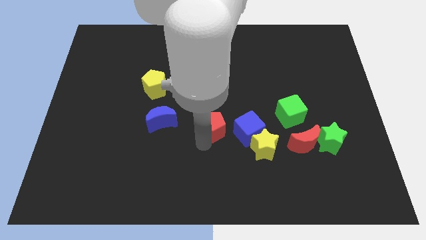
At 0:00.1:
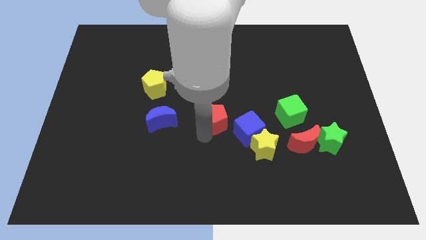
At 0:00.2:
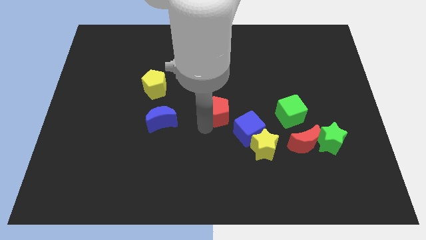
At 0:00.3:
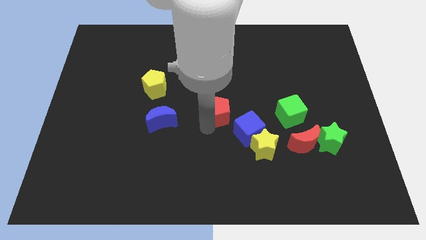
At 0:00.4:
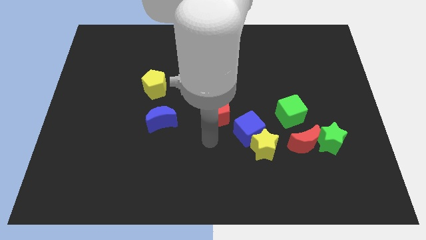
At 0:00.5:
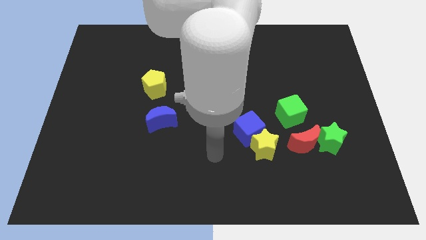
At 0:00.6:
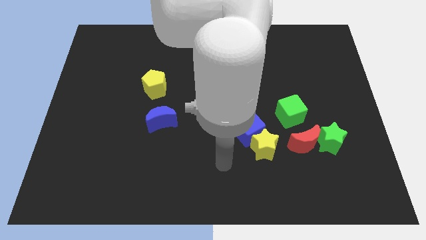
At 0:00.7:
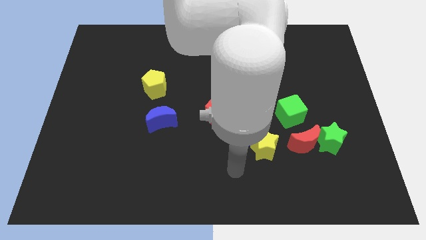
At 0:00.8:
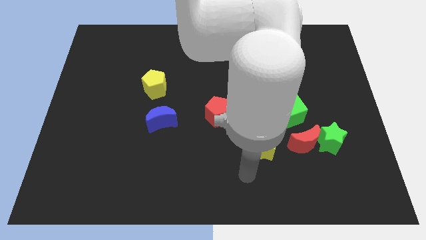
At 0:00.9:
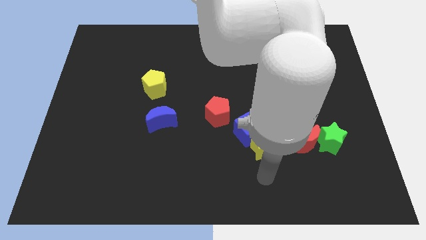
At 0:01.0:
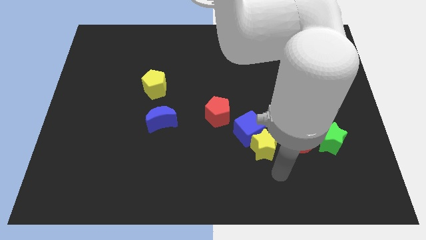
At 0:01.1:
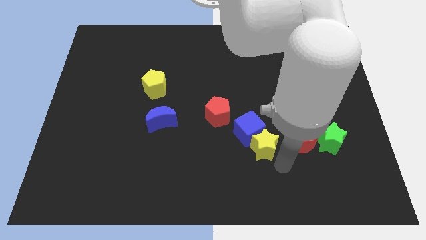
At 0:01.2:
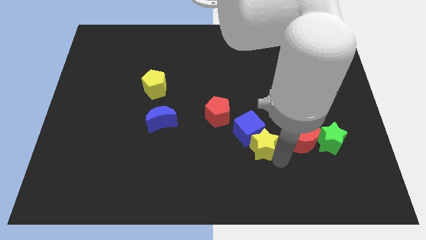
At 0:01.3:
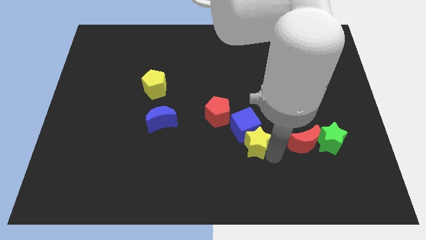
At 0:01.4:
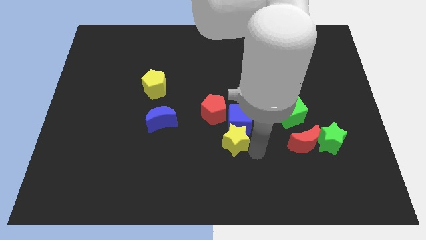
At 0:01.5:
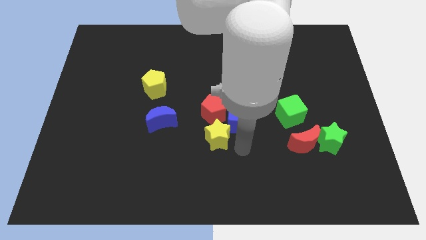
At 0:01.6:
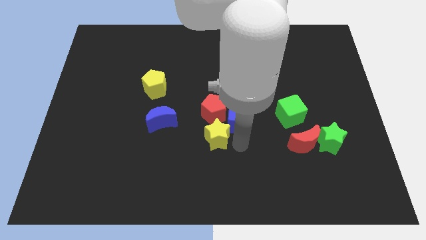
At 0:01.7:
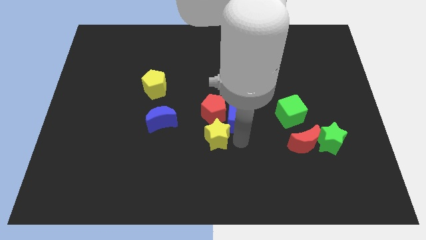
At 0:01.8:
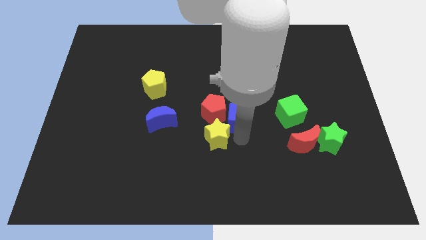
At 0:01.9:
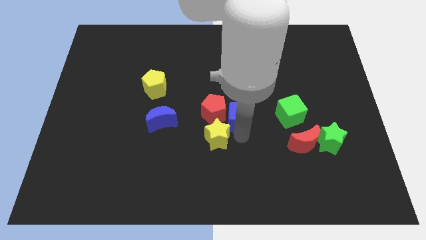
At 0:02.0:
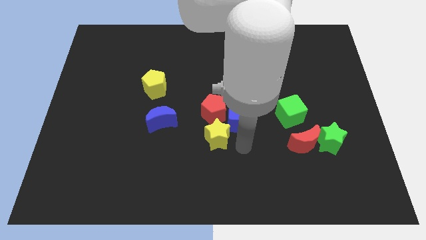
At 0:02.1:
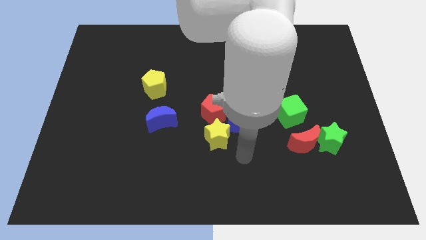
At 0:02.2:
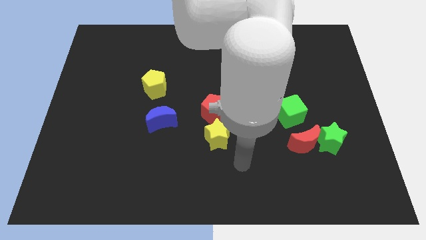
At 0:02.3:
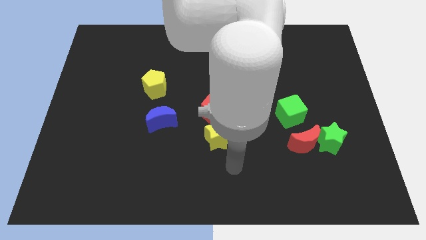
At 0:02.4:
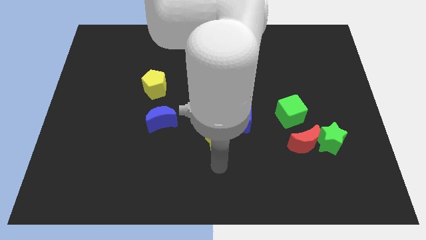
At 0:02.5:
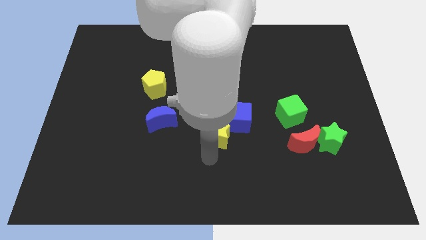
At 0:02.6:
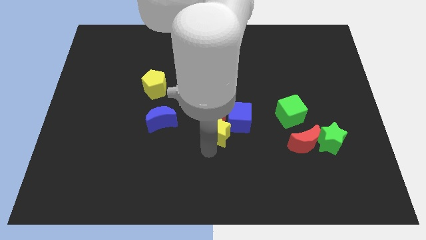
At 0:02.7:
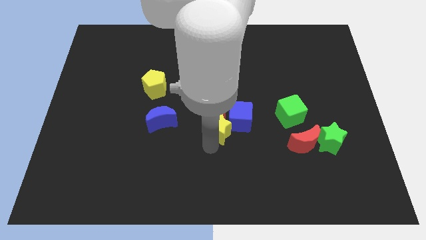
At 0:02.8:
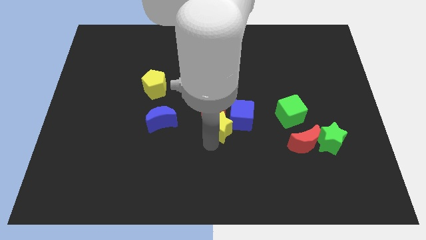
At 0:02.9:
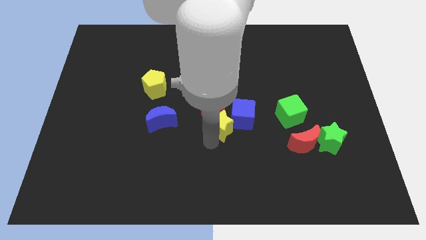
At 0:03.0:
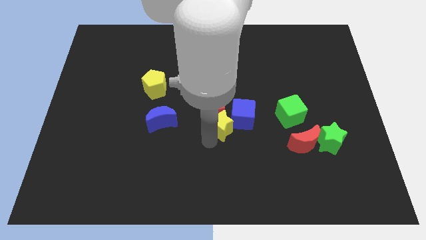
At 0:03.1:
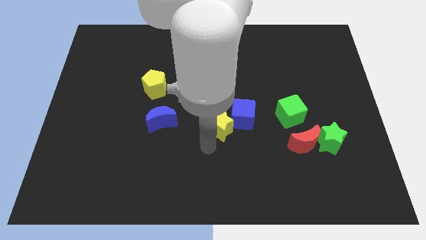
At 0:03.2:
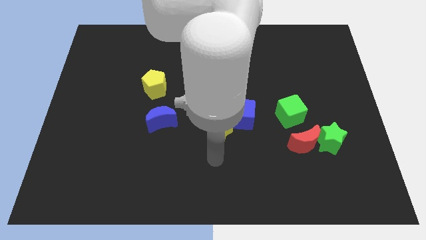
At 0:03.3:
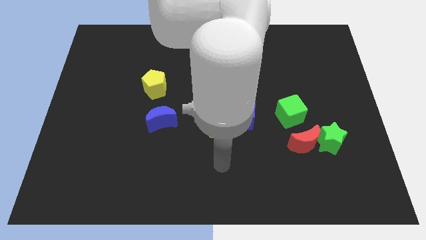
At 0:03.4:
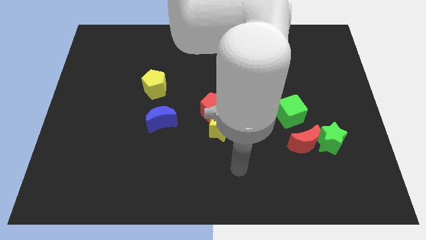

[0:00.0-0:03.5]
slide the yellow star into the red pentagon

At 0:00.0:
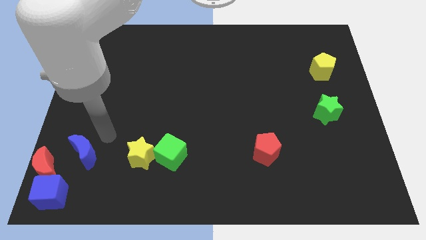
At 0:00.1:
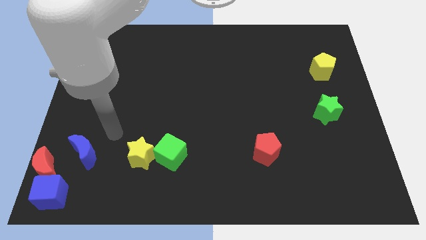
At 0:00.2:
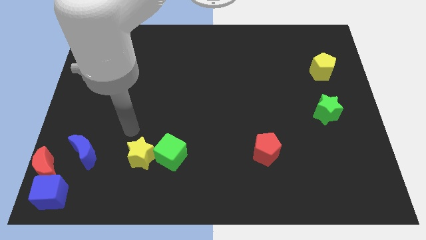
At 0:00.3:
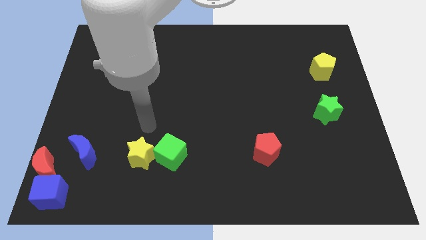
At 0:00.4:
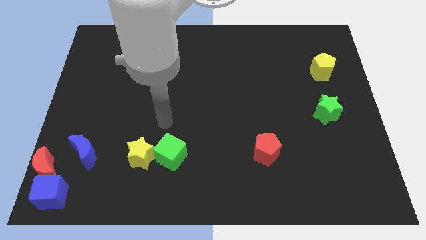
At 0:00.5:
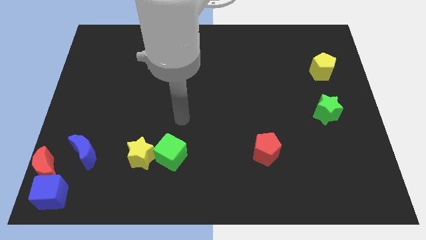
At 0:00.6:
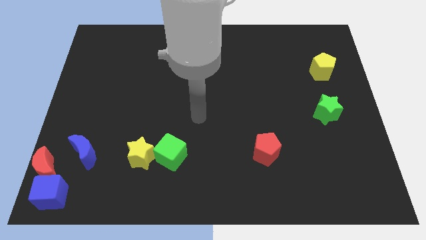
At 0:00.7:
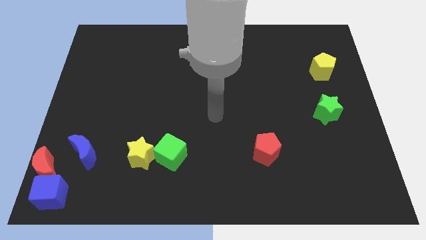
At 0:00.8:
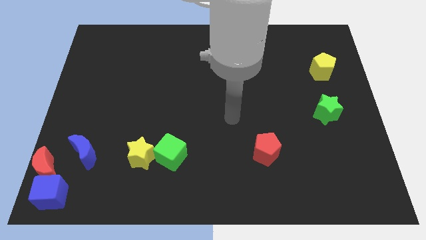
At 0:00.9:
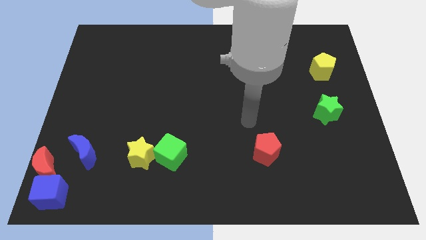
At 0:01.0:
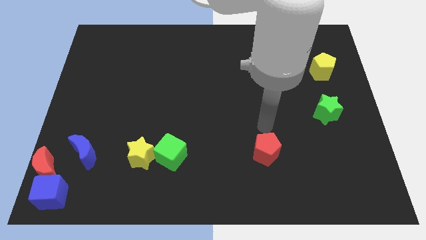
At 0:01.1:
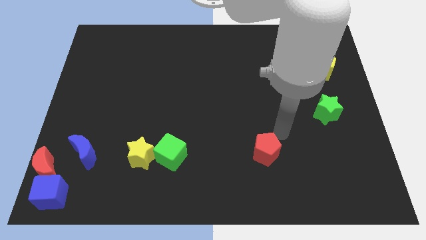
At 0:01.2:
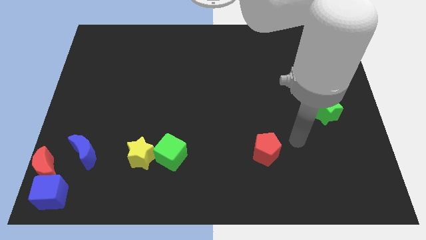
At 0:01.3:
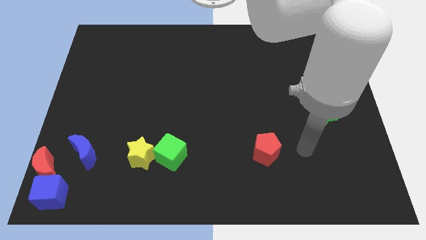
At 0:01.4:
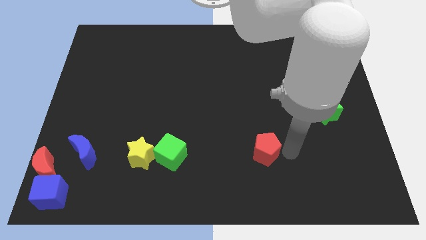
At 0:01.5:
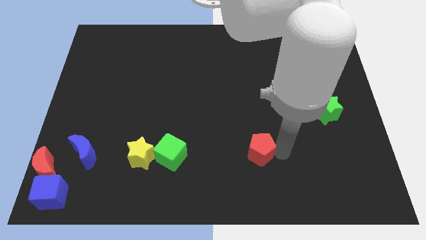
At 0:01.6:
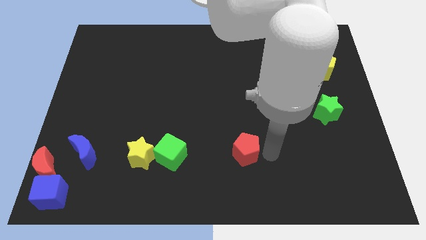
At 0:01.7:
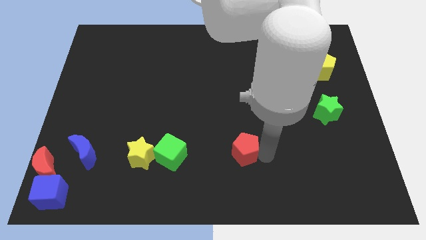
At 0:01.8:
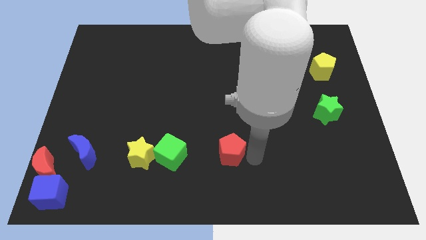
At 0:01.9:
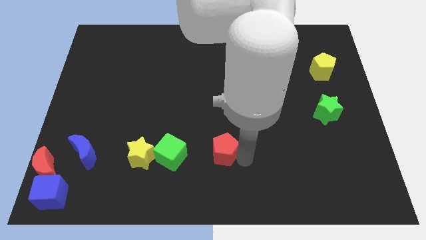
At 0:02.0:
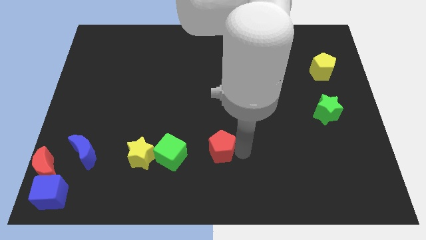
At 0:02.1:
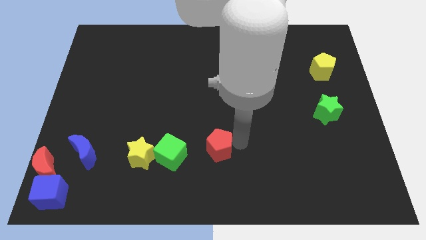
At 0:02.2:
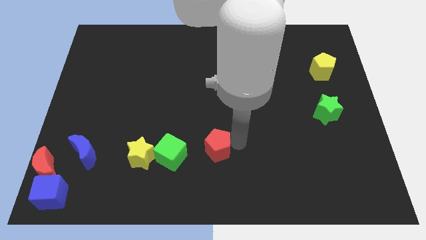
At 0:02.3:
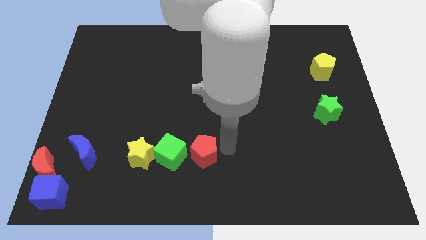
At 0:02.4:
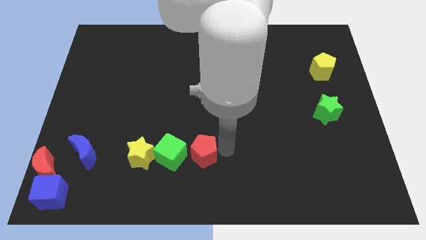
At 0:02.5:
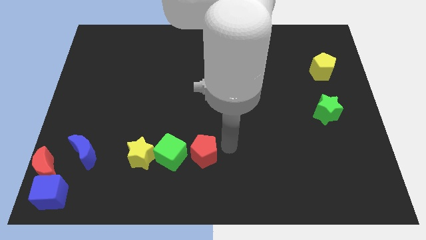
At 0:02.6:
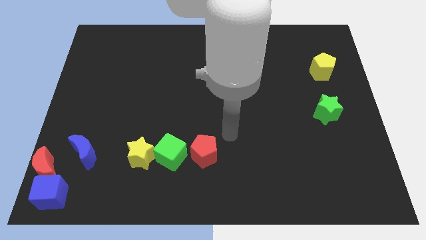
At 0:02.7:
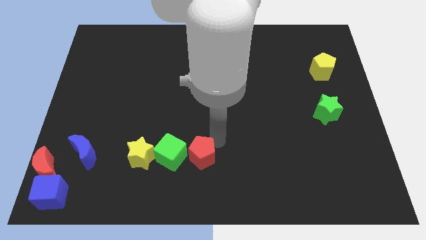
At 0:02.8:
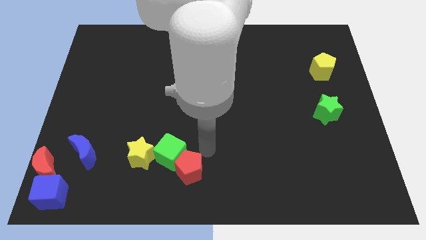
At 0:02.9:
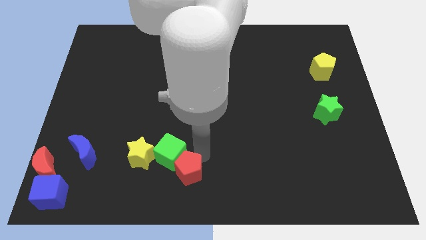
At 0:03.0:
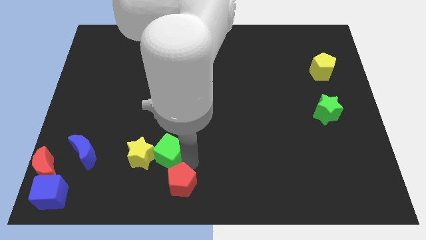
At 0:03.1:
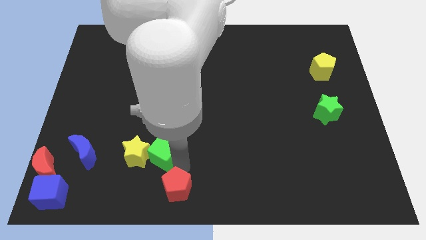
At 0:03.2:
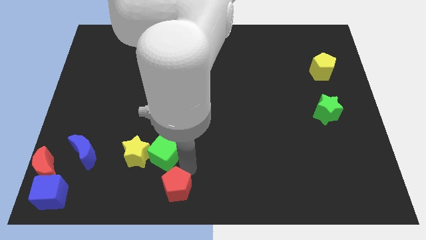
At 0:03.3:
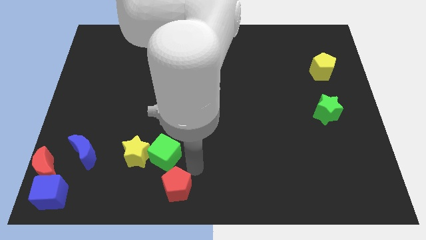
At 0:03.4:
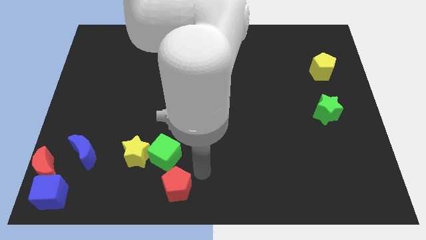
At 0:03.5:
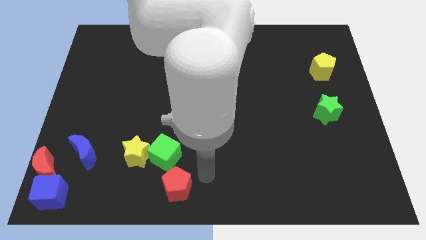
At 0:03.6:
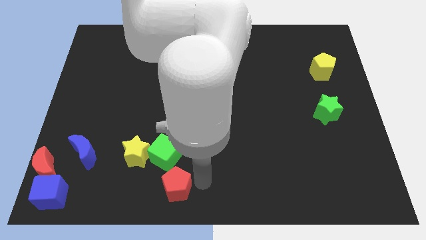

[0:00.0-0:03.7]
push the red pentagon below the green cube

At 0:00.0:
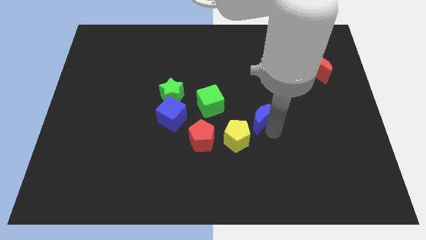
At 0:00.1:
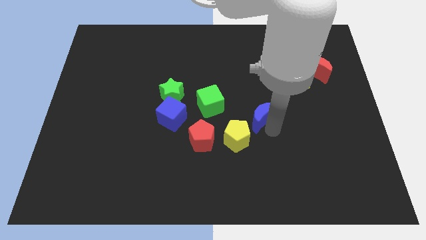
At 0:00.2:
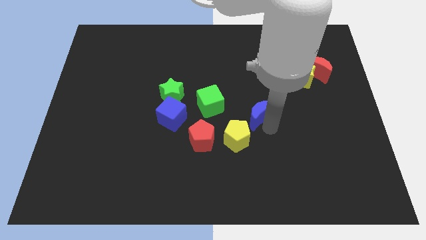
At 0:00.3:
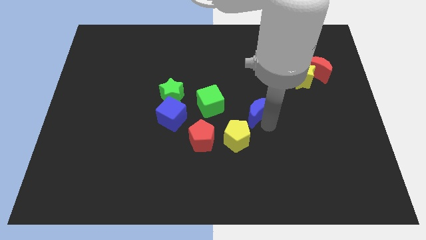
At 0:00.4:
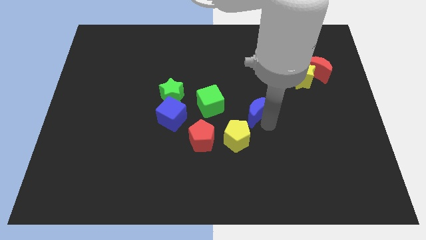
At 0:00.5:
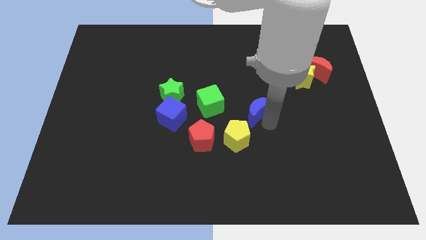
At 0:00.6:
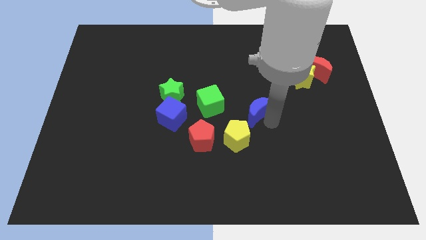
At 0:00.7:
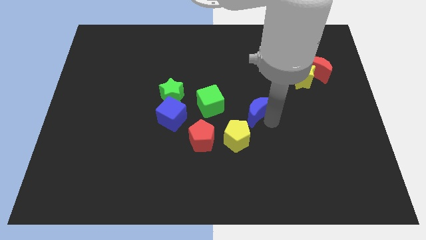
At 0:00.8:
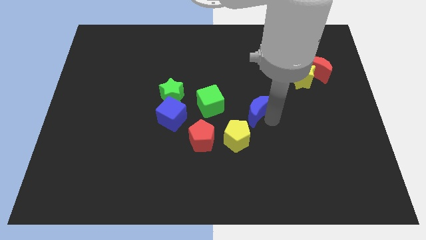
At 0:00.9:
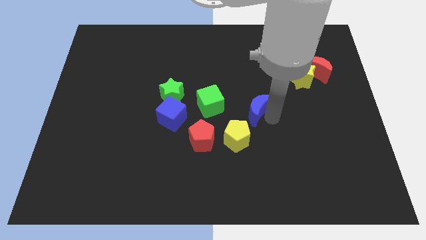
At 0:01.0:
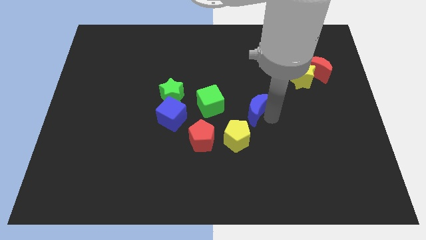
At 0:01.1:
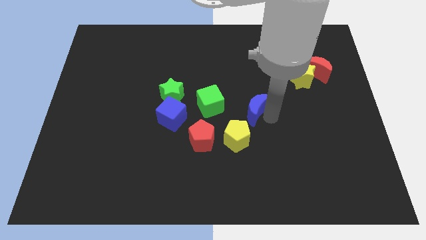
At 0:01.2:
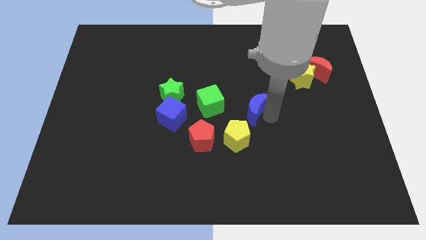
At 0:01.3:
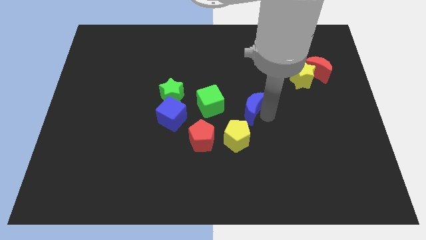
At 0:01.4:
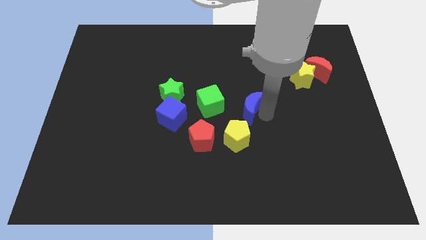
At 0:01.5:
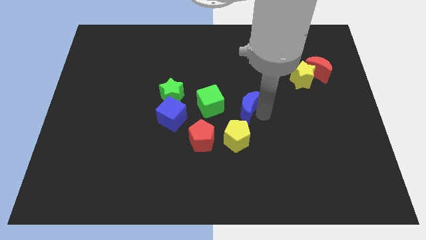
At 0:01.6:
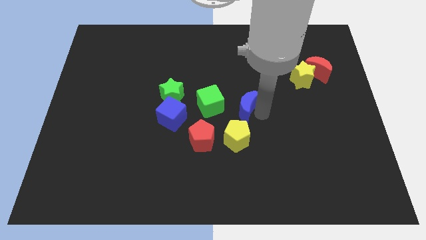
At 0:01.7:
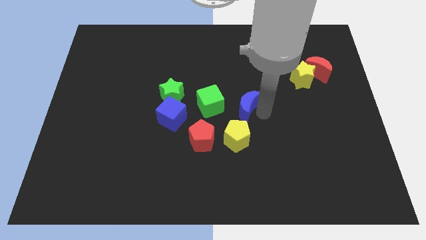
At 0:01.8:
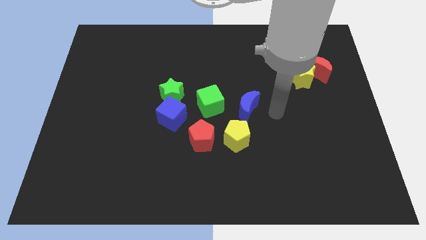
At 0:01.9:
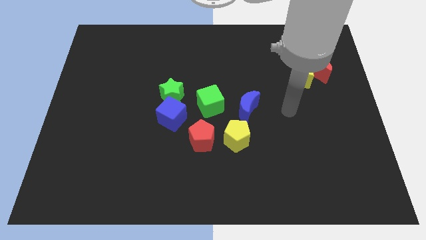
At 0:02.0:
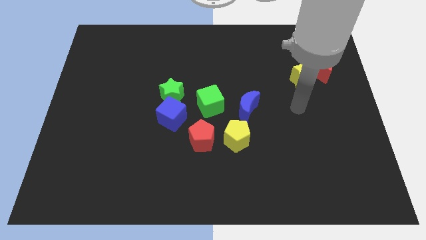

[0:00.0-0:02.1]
move the blue moon diagonal to the yellow pentagon
